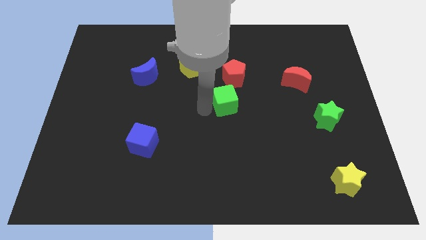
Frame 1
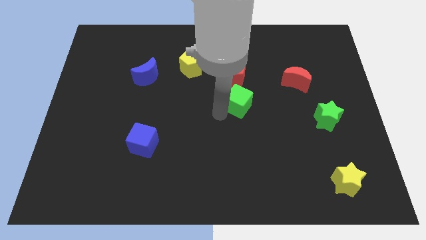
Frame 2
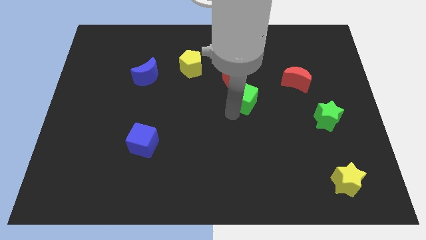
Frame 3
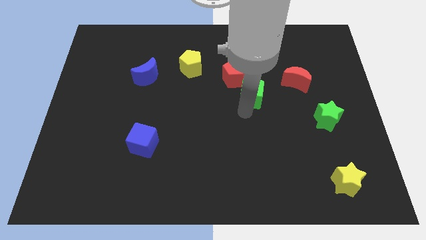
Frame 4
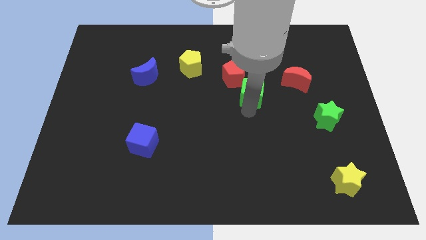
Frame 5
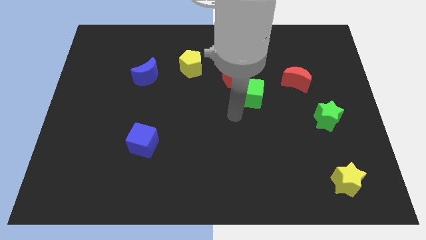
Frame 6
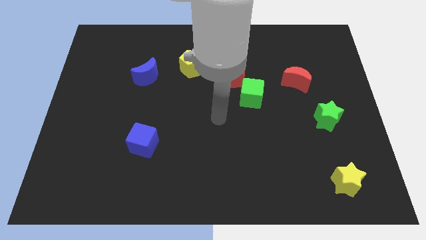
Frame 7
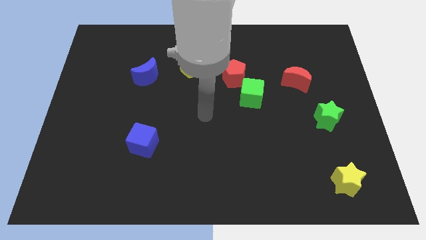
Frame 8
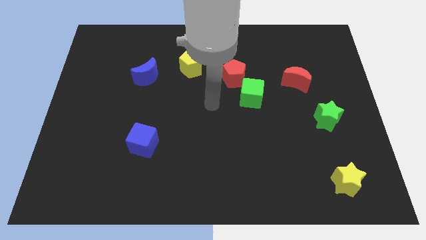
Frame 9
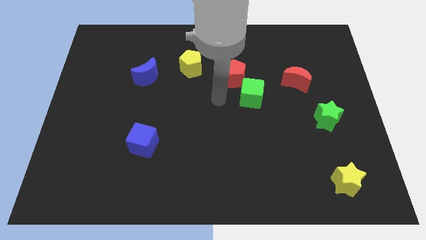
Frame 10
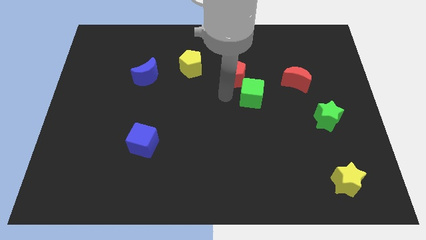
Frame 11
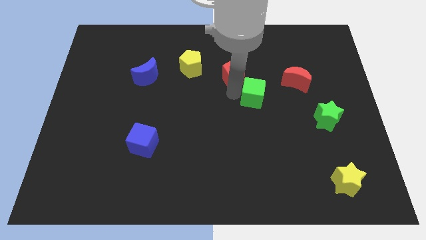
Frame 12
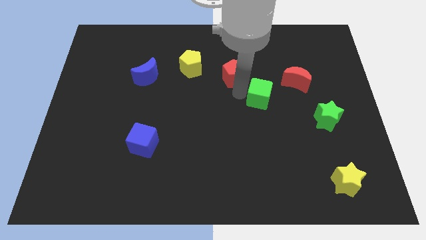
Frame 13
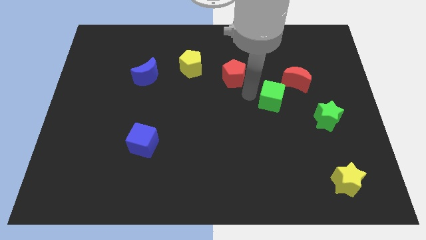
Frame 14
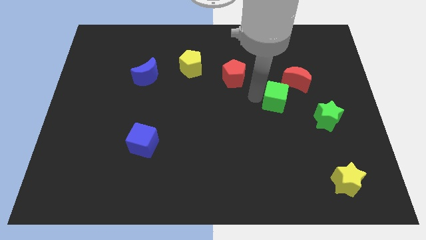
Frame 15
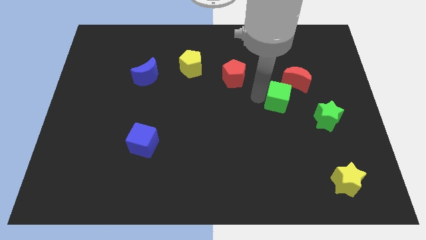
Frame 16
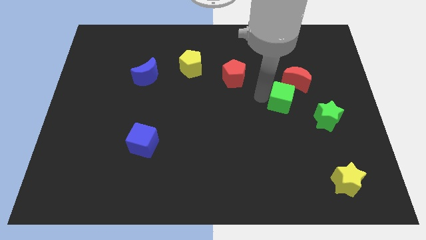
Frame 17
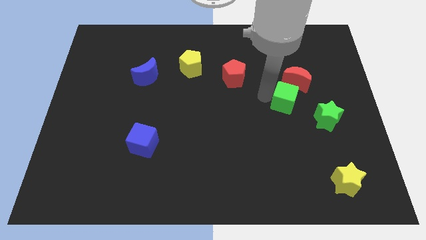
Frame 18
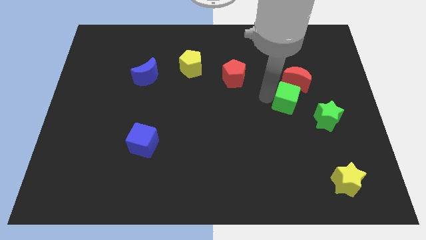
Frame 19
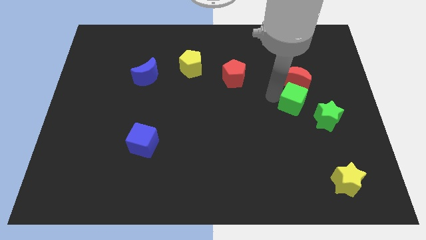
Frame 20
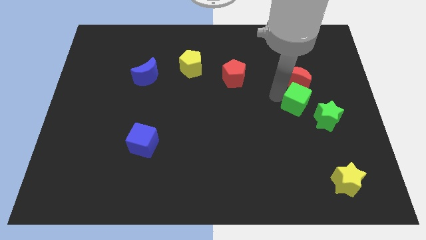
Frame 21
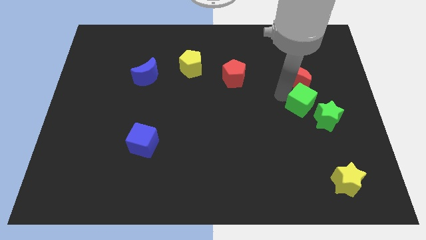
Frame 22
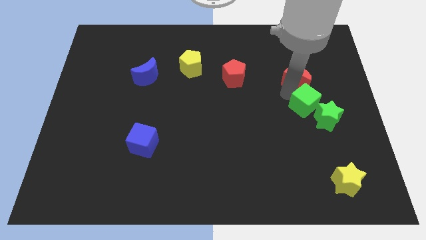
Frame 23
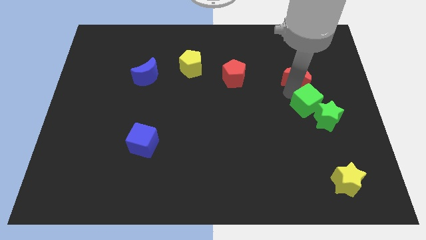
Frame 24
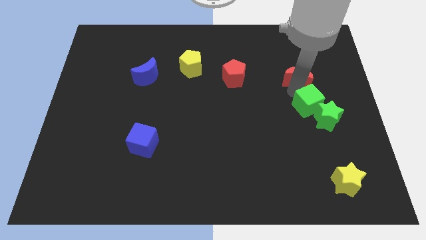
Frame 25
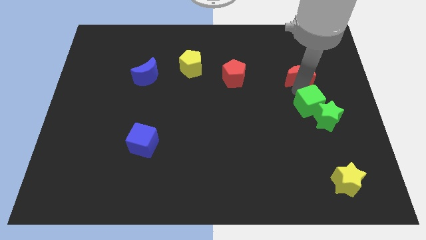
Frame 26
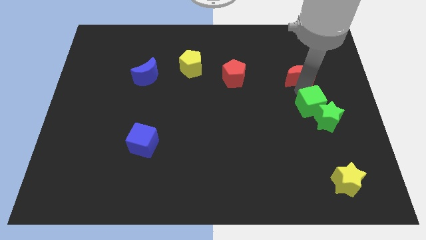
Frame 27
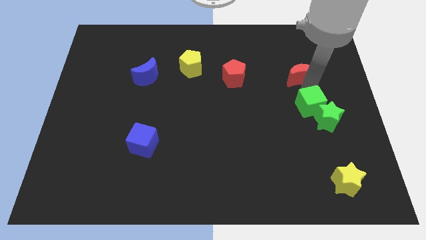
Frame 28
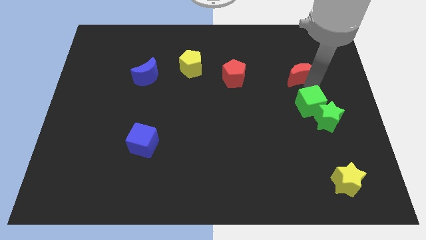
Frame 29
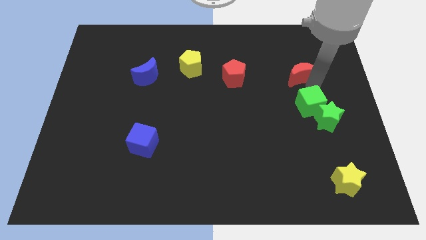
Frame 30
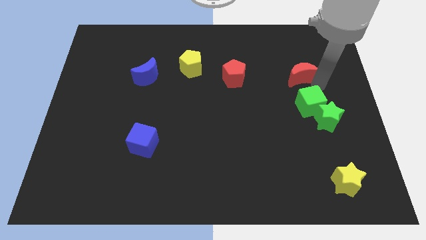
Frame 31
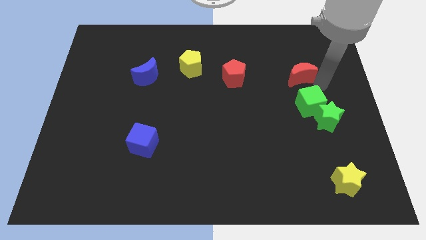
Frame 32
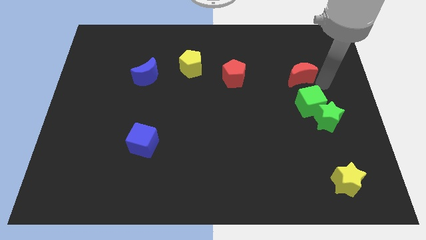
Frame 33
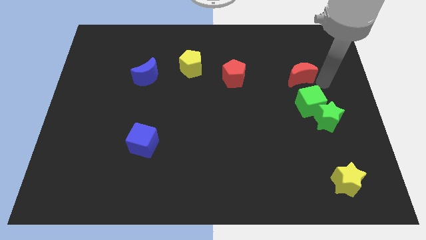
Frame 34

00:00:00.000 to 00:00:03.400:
push the green star into the green cube

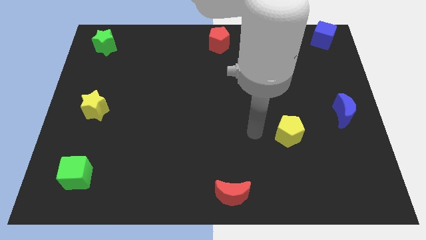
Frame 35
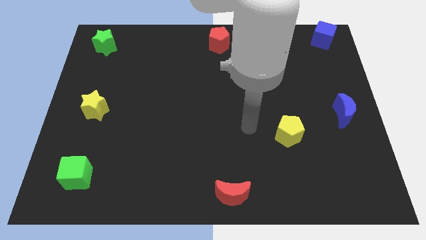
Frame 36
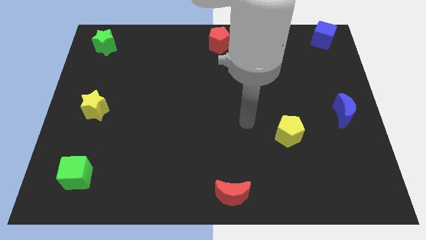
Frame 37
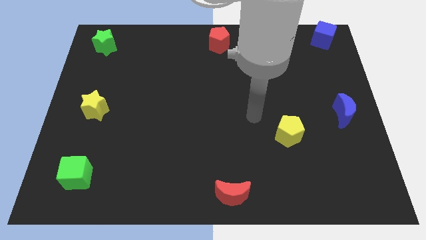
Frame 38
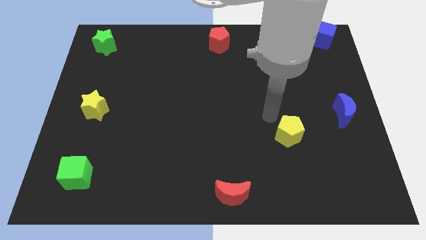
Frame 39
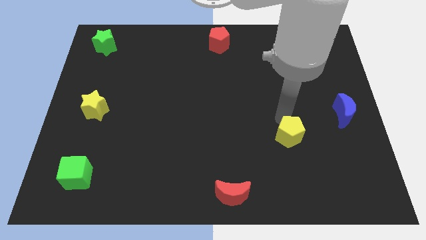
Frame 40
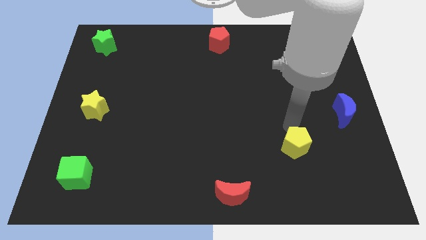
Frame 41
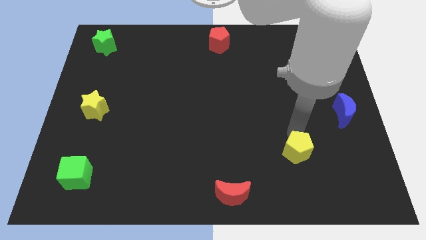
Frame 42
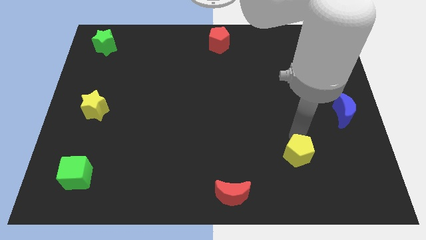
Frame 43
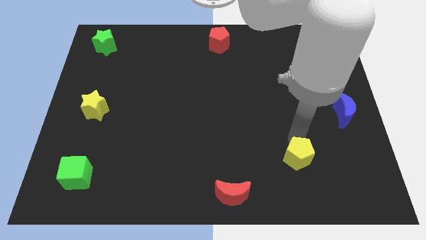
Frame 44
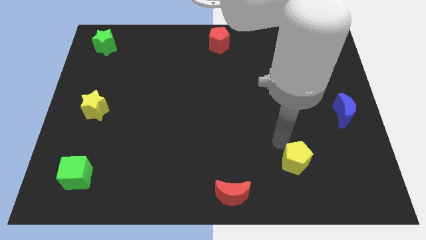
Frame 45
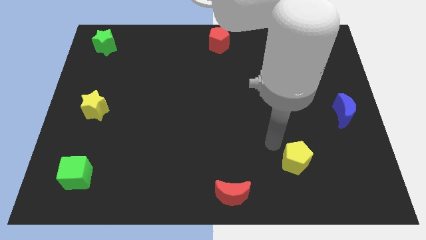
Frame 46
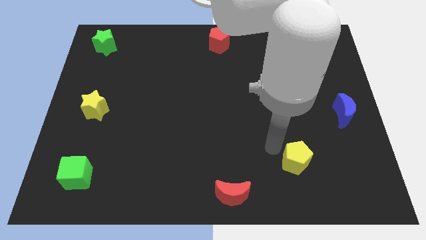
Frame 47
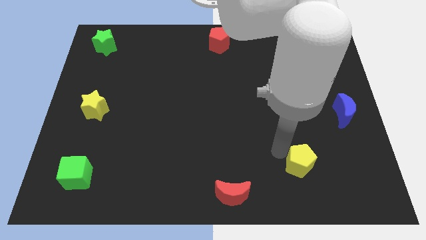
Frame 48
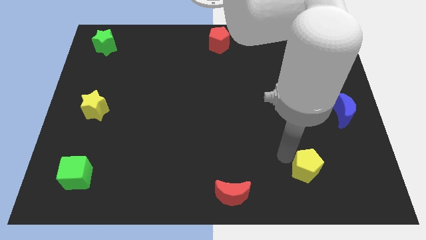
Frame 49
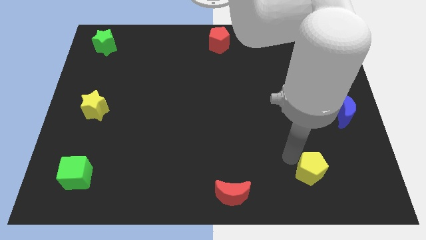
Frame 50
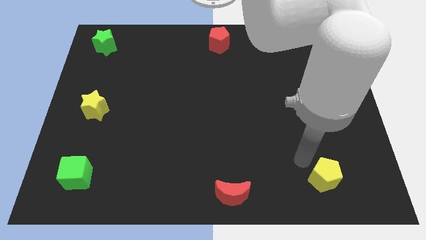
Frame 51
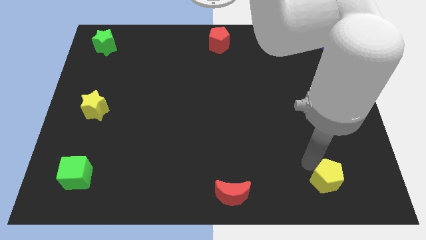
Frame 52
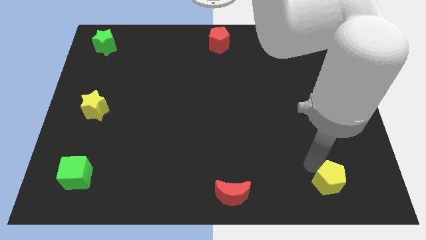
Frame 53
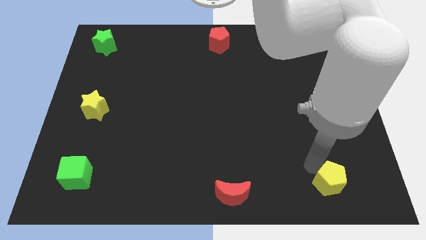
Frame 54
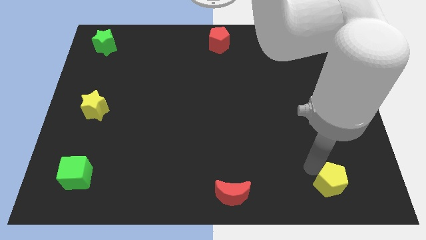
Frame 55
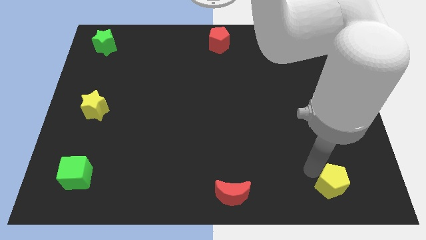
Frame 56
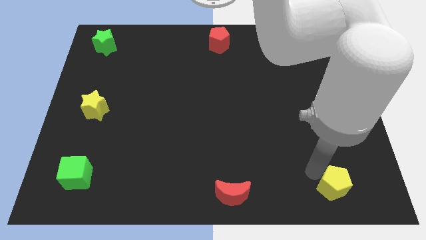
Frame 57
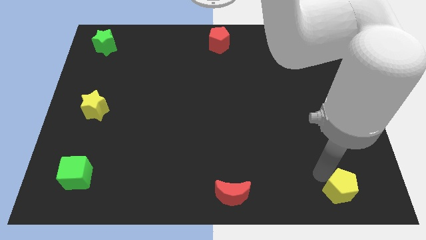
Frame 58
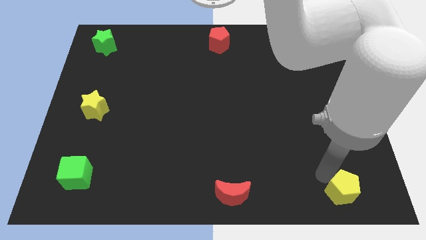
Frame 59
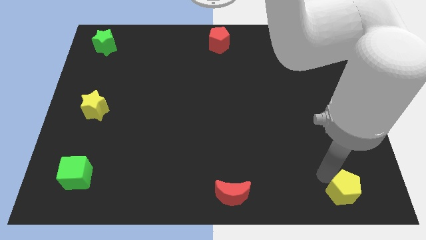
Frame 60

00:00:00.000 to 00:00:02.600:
push the yellow pentagon to the right of the red moon

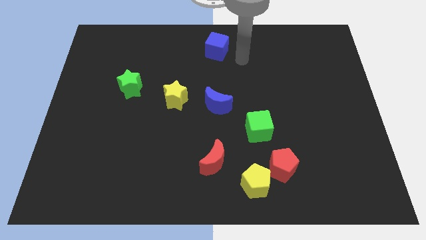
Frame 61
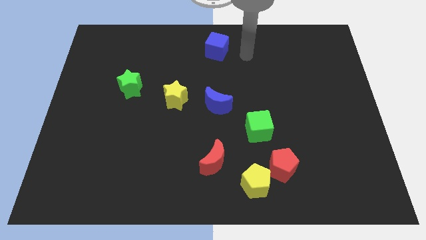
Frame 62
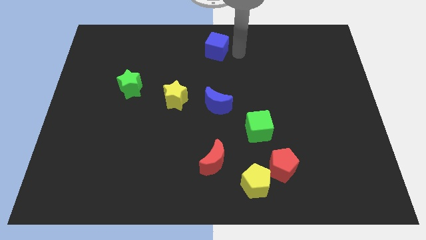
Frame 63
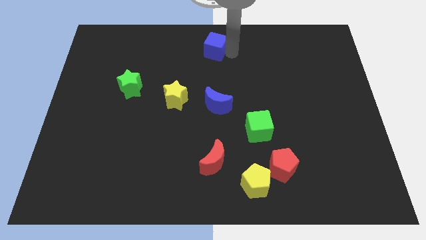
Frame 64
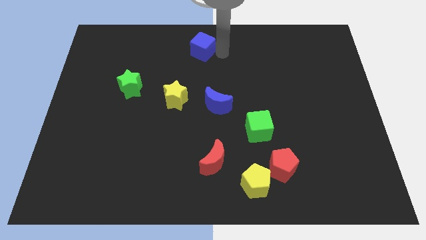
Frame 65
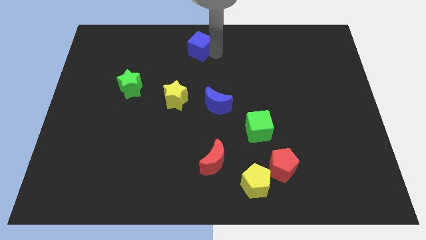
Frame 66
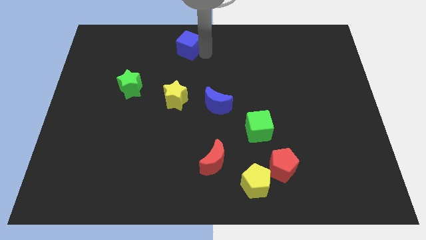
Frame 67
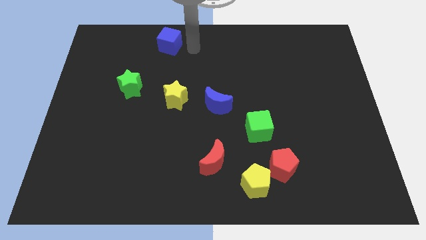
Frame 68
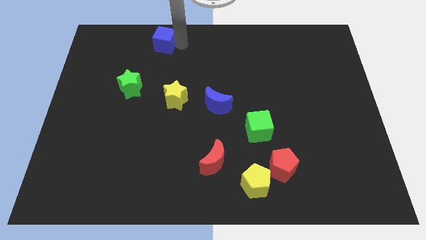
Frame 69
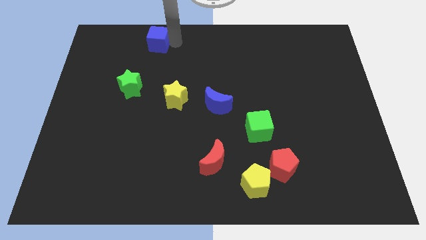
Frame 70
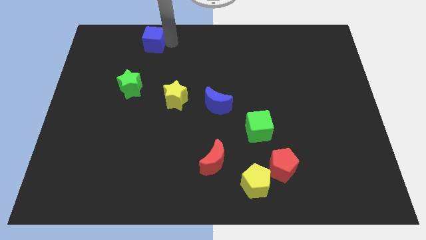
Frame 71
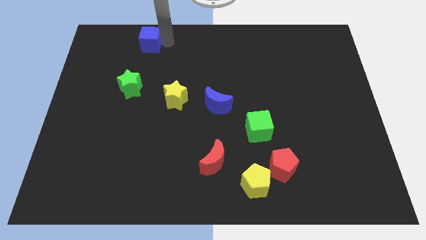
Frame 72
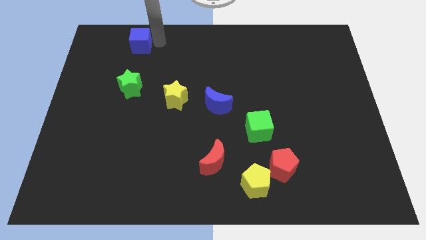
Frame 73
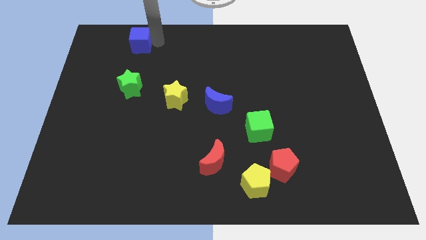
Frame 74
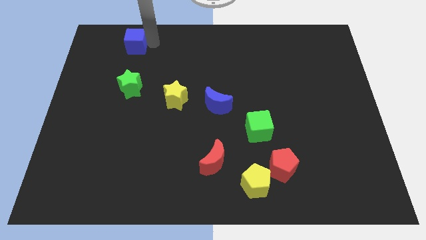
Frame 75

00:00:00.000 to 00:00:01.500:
push the blue cube above the green star

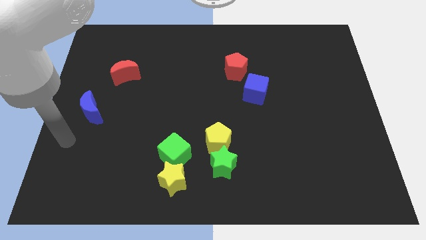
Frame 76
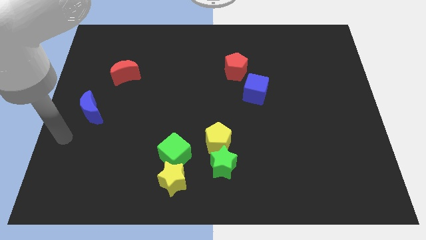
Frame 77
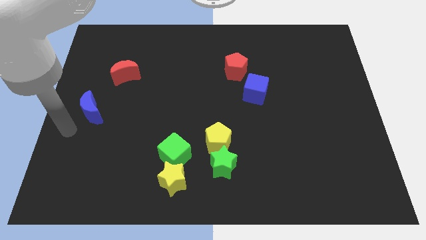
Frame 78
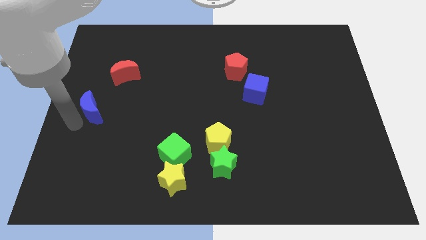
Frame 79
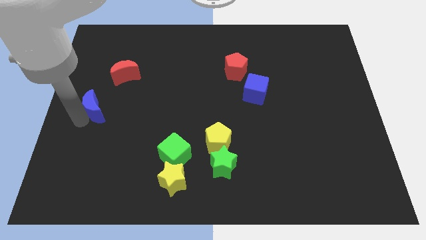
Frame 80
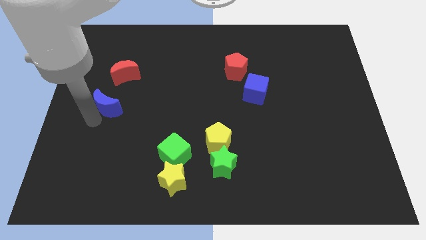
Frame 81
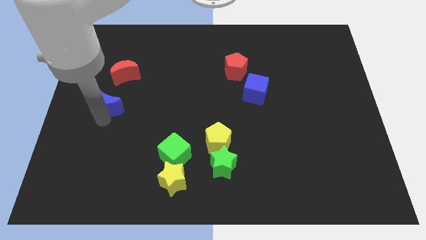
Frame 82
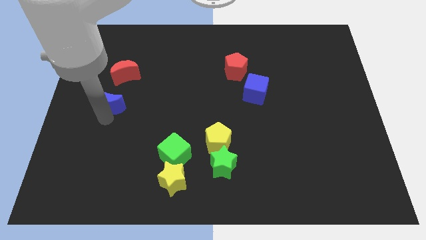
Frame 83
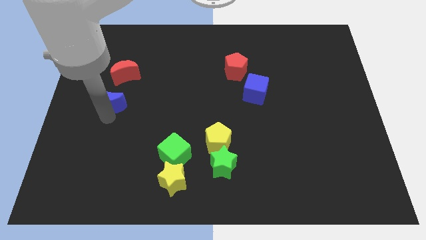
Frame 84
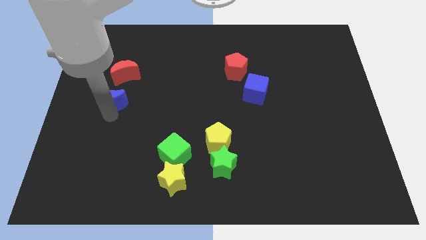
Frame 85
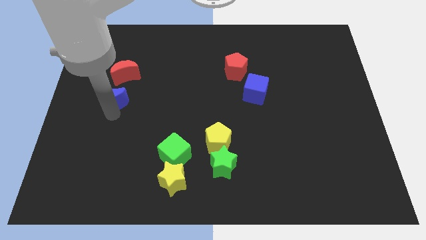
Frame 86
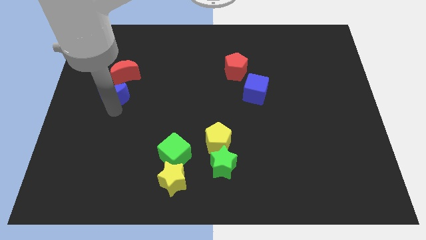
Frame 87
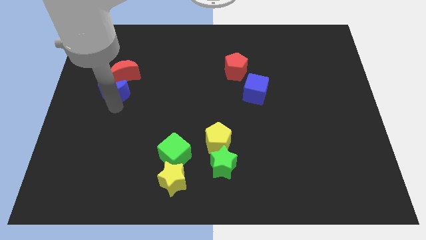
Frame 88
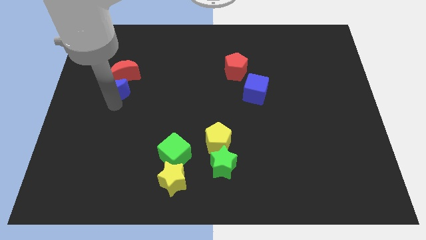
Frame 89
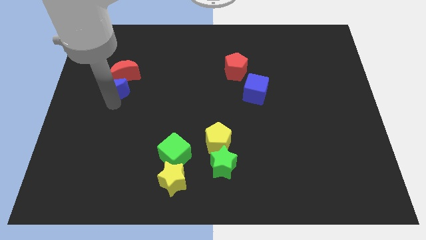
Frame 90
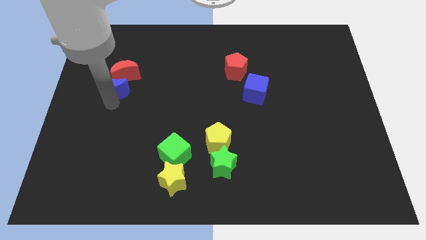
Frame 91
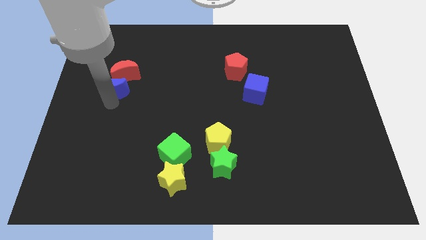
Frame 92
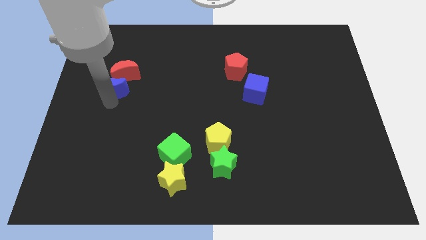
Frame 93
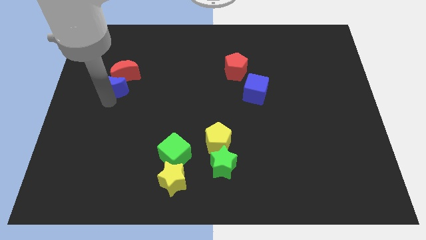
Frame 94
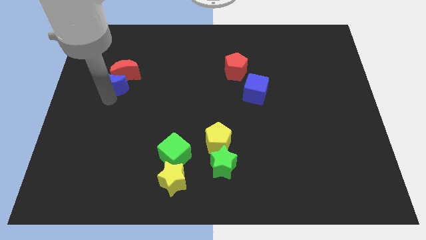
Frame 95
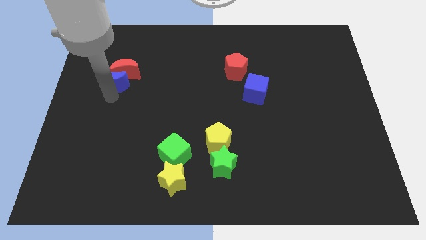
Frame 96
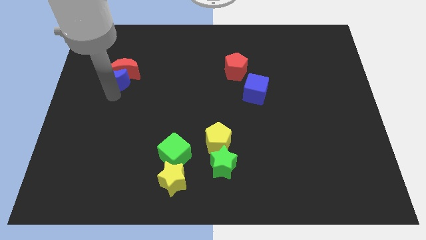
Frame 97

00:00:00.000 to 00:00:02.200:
move the blue crescent close to red crescent
